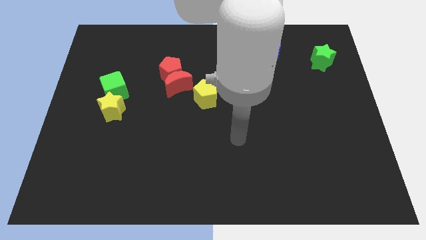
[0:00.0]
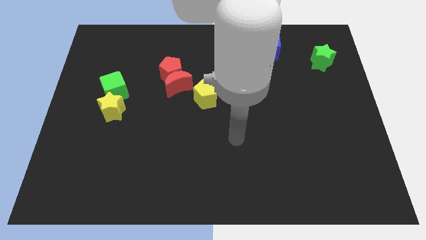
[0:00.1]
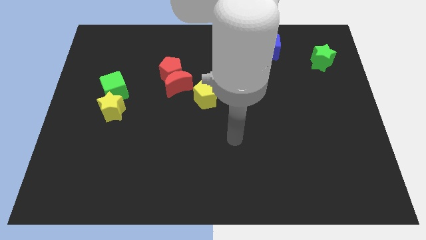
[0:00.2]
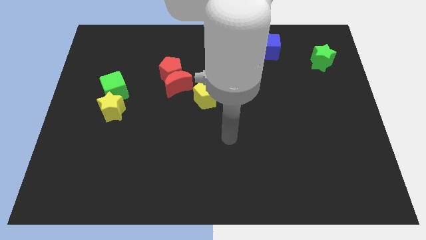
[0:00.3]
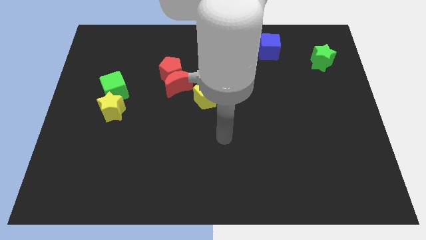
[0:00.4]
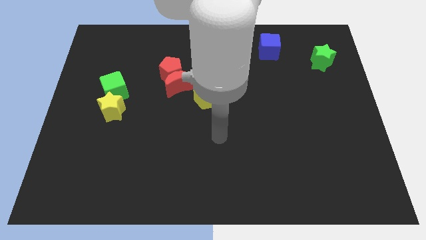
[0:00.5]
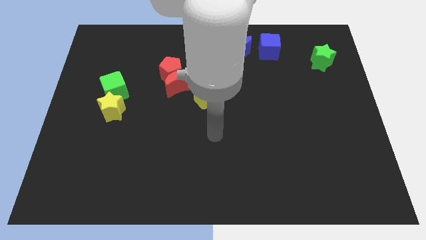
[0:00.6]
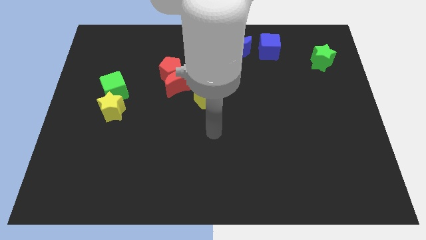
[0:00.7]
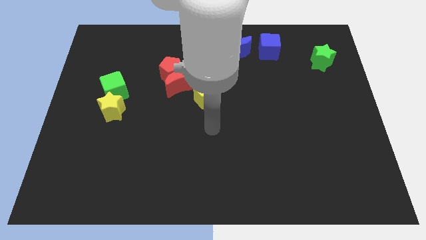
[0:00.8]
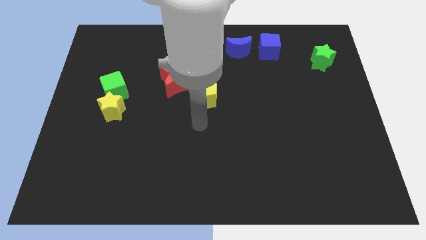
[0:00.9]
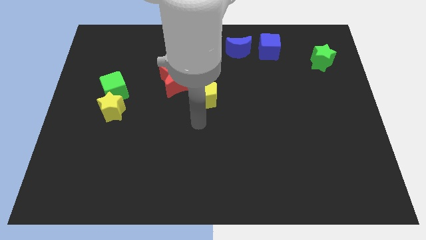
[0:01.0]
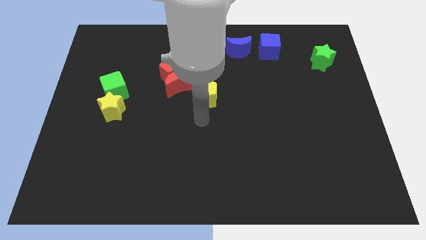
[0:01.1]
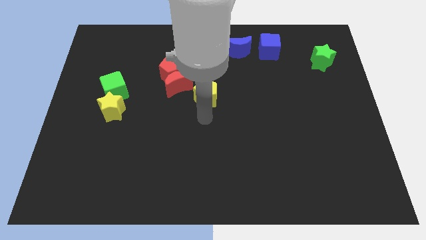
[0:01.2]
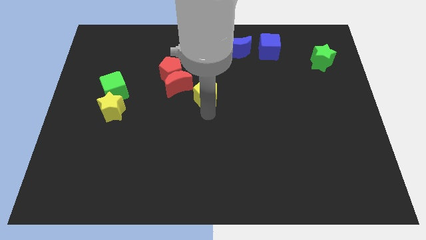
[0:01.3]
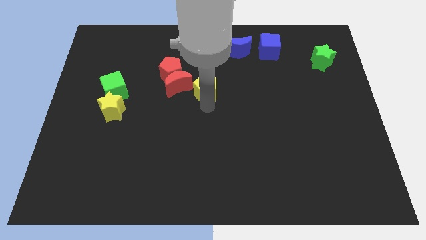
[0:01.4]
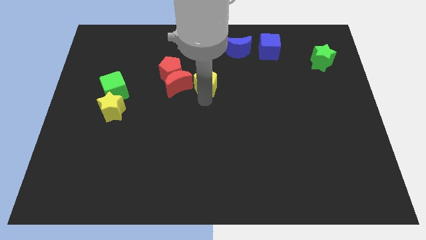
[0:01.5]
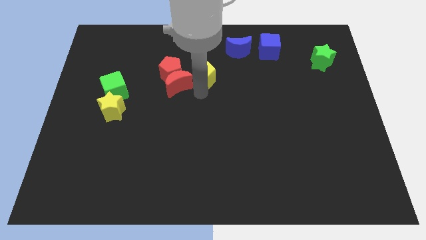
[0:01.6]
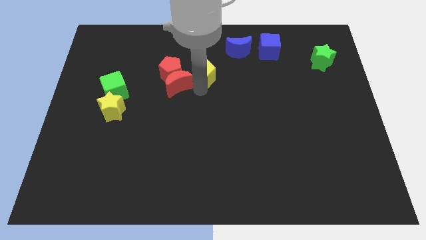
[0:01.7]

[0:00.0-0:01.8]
move the yellow pentagon to the right of the red moon

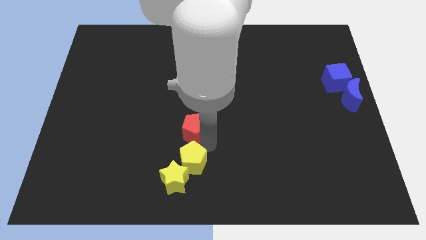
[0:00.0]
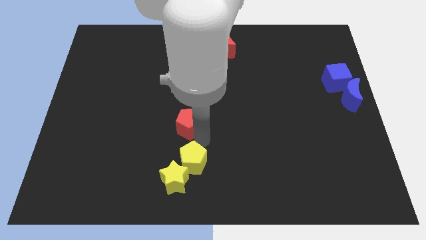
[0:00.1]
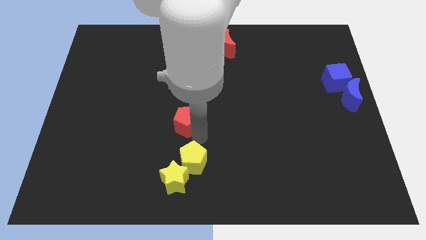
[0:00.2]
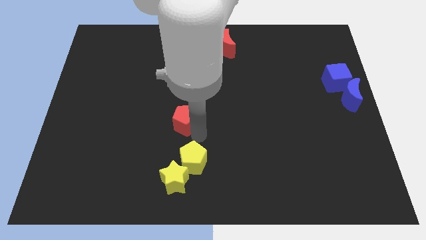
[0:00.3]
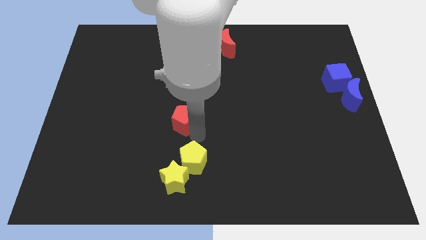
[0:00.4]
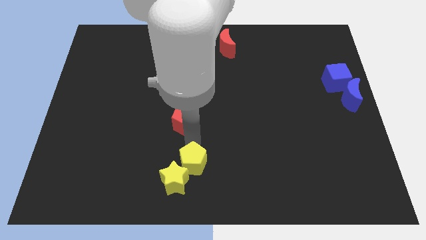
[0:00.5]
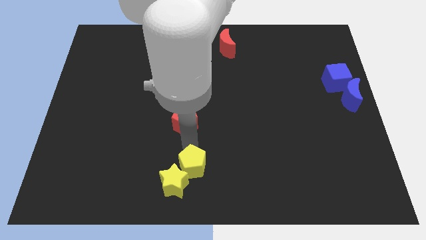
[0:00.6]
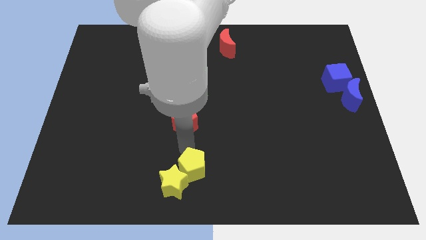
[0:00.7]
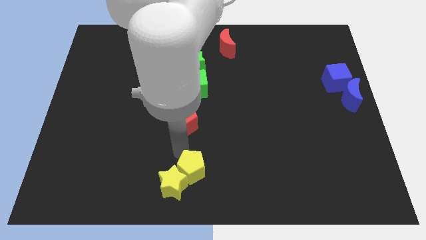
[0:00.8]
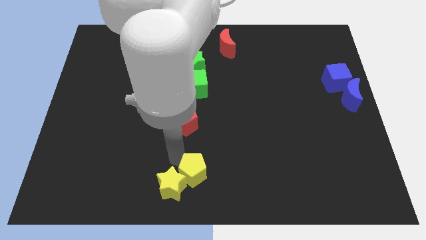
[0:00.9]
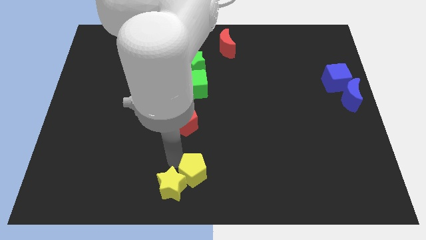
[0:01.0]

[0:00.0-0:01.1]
separate red pentagon and yellow blocks

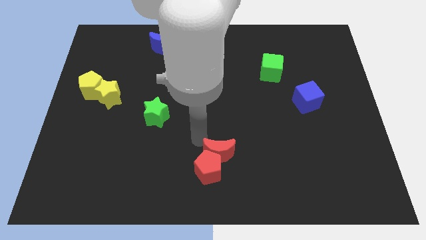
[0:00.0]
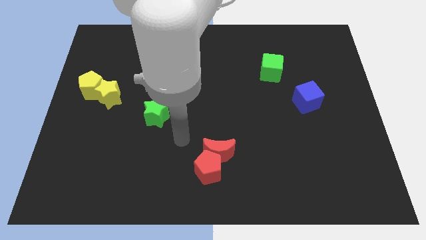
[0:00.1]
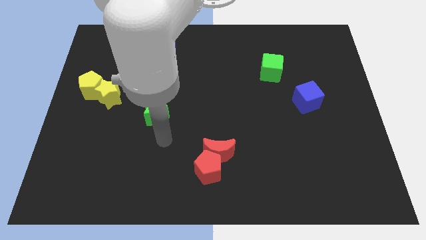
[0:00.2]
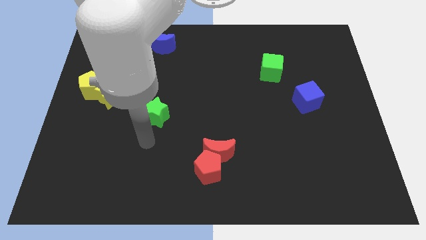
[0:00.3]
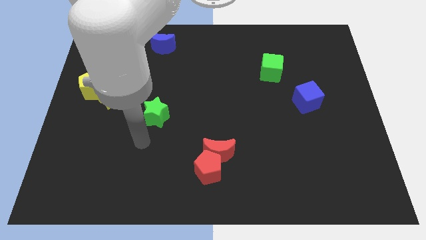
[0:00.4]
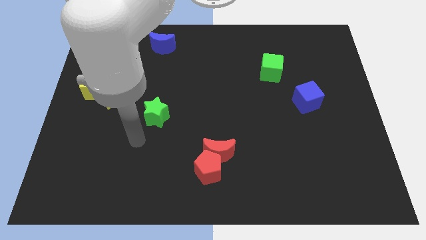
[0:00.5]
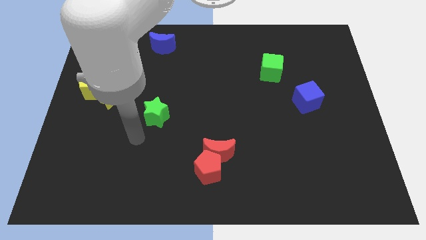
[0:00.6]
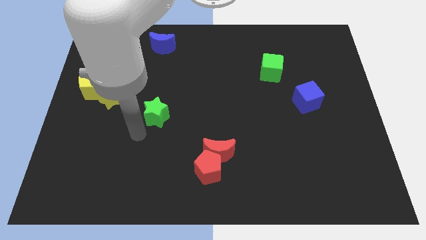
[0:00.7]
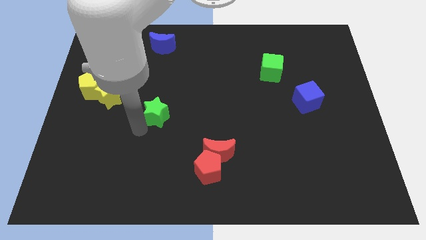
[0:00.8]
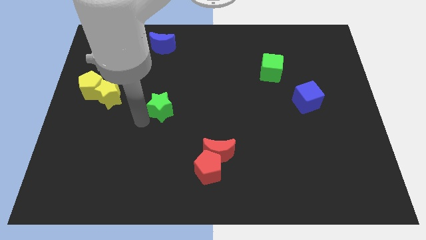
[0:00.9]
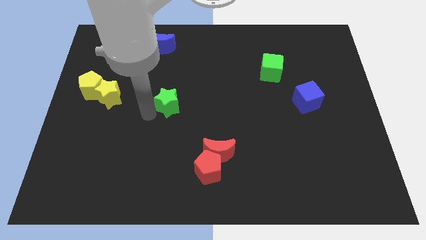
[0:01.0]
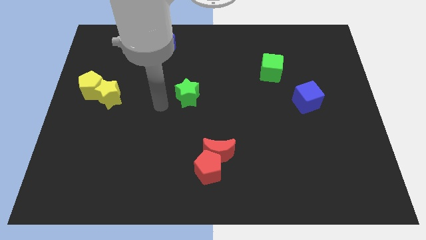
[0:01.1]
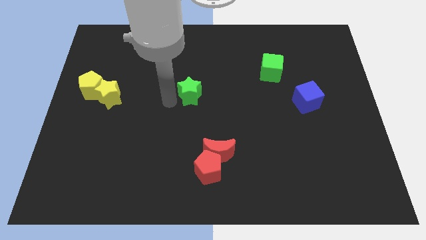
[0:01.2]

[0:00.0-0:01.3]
move the green star towards the left side of the green cube

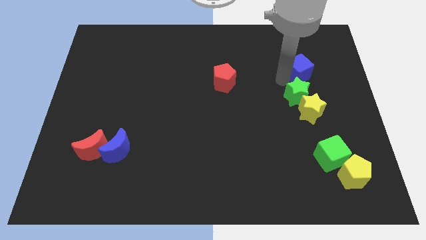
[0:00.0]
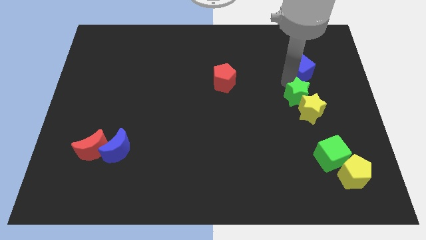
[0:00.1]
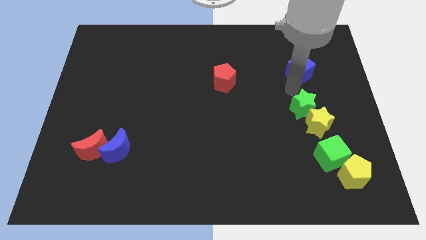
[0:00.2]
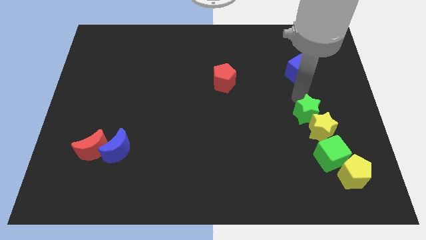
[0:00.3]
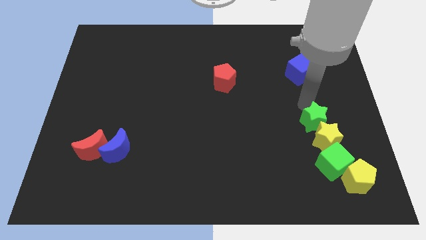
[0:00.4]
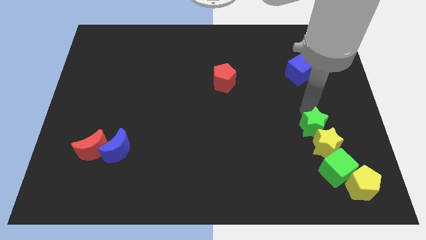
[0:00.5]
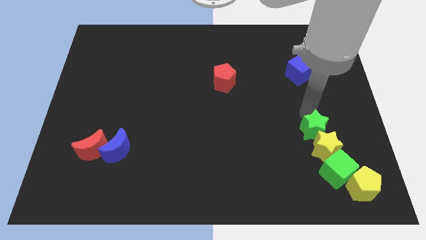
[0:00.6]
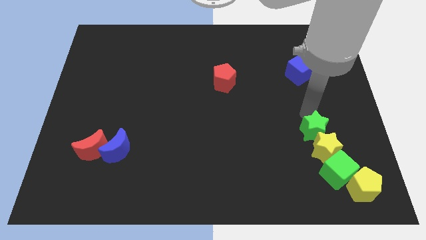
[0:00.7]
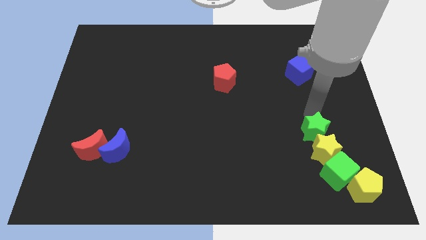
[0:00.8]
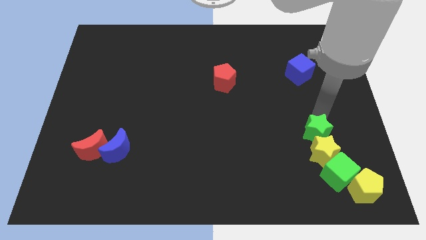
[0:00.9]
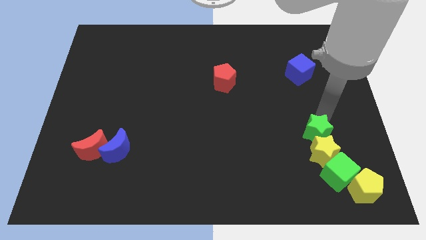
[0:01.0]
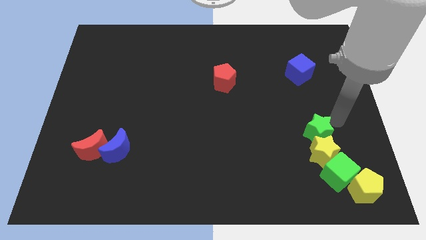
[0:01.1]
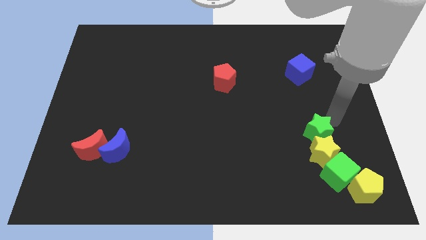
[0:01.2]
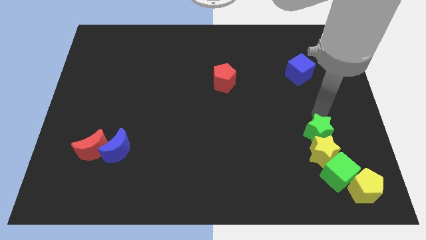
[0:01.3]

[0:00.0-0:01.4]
move the green star and yellow star into the group of blocks

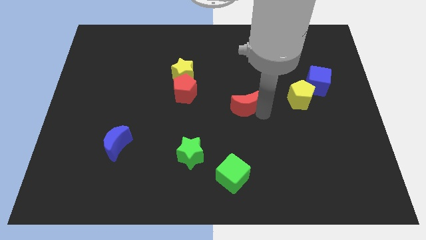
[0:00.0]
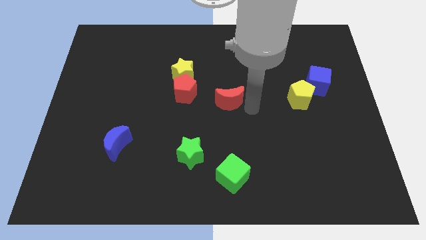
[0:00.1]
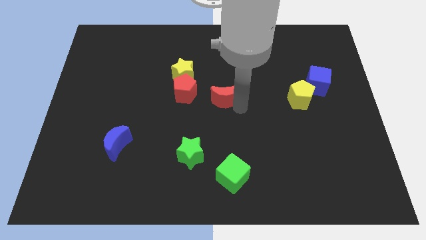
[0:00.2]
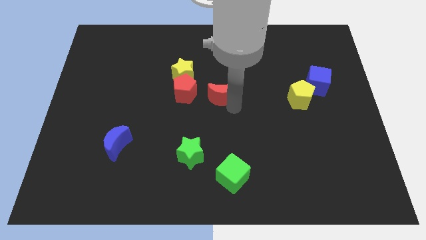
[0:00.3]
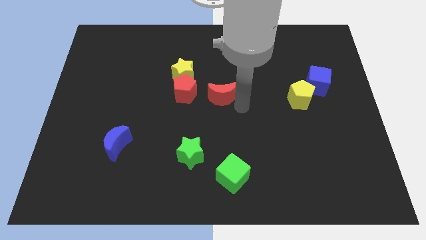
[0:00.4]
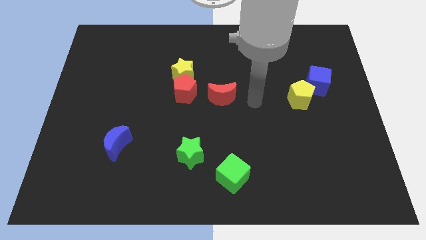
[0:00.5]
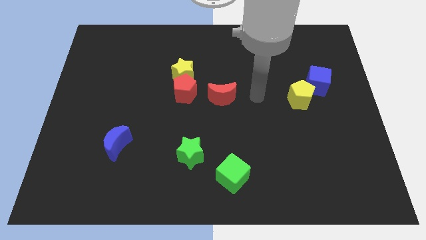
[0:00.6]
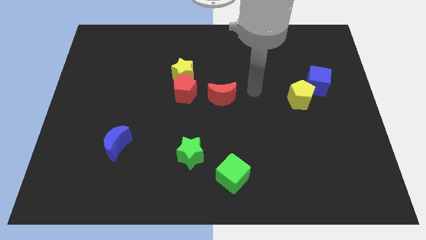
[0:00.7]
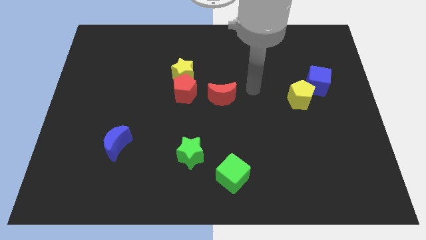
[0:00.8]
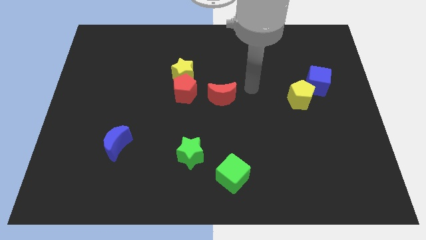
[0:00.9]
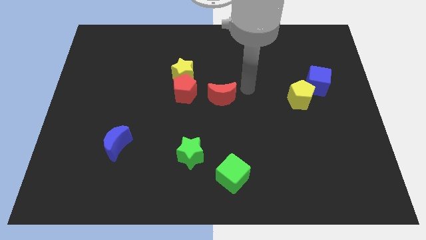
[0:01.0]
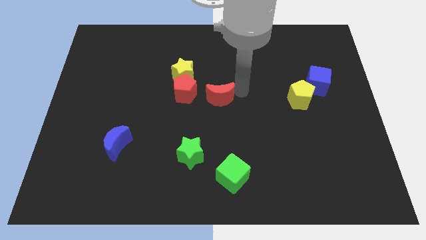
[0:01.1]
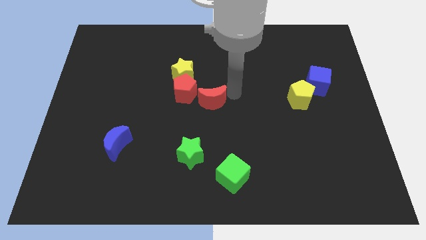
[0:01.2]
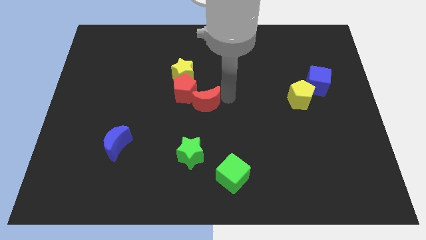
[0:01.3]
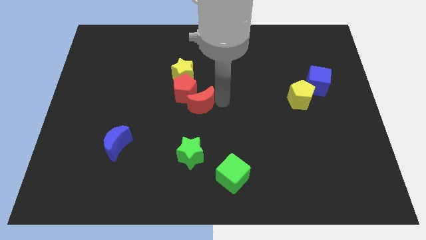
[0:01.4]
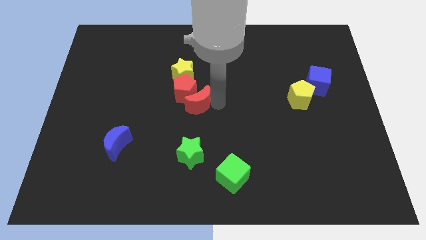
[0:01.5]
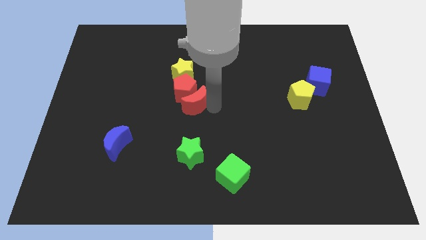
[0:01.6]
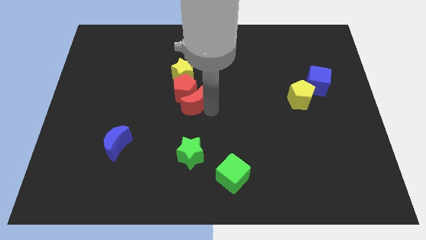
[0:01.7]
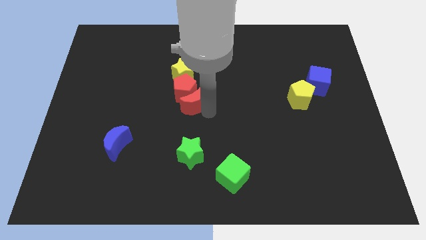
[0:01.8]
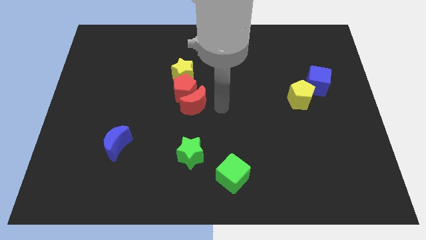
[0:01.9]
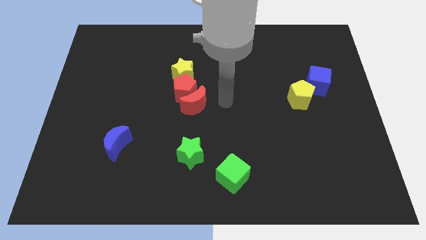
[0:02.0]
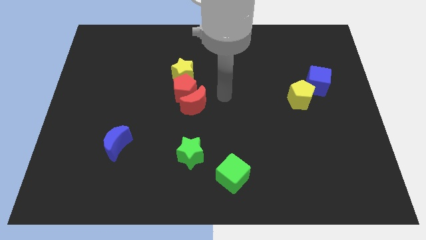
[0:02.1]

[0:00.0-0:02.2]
move red moon into red pentagon

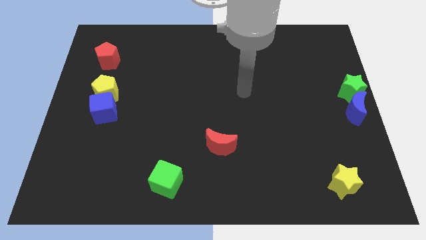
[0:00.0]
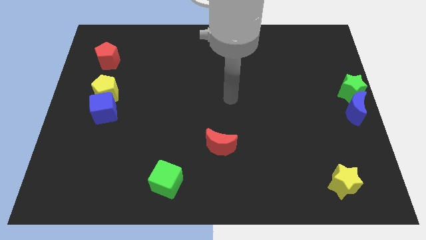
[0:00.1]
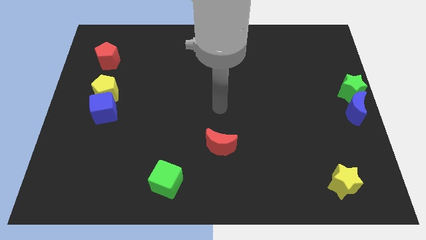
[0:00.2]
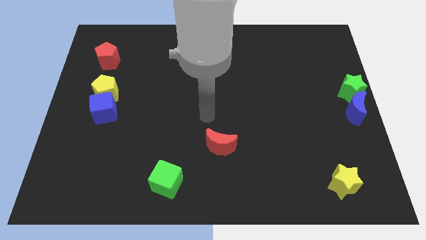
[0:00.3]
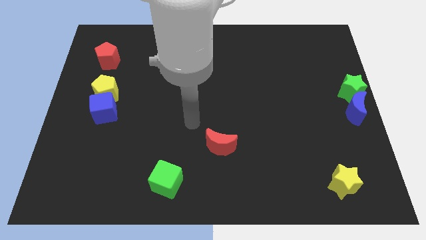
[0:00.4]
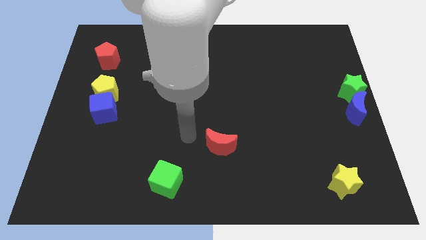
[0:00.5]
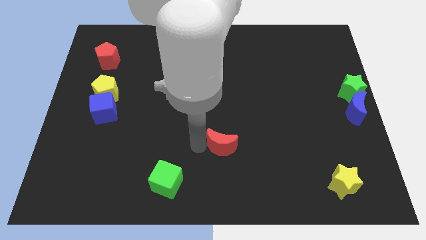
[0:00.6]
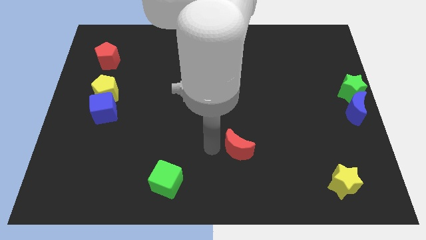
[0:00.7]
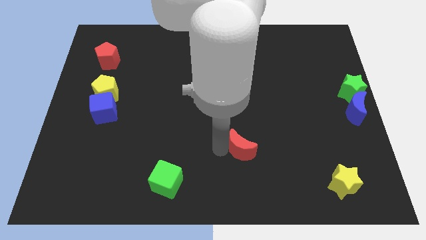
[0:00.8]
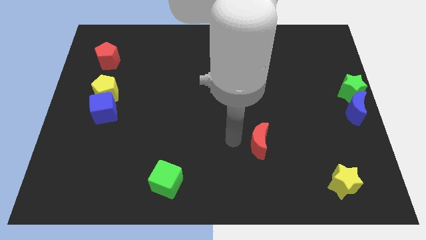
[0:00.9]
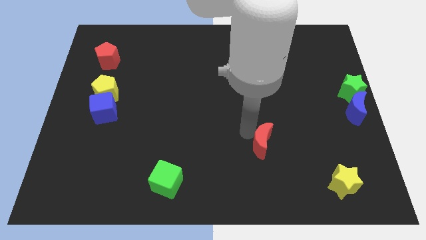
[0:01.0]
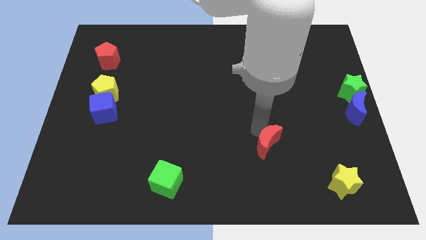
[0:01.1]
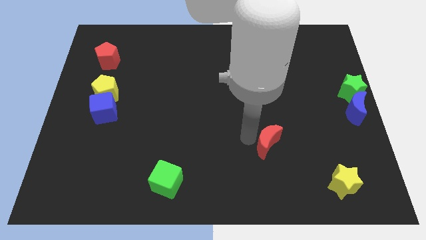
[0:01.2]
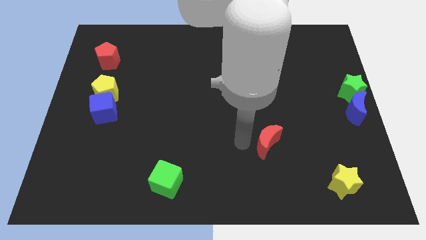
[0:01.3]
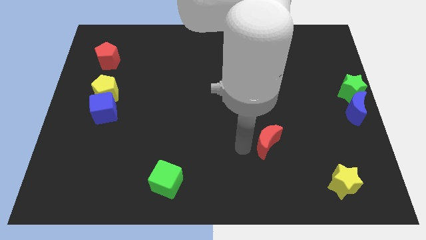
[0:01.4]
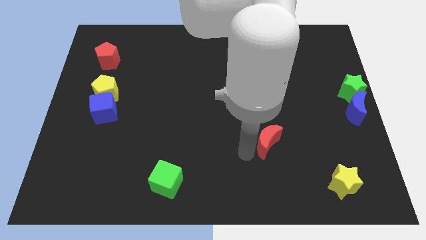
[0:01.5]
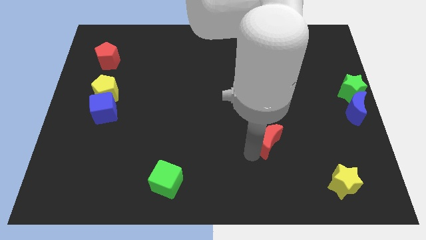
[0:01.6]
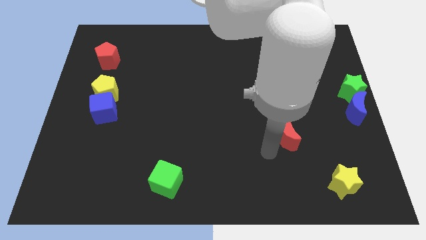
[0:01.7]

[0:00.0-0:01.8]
slide the red moon diagonal top left to yellow star
